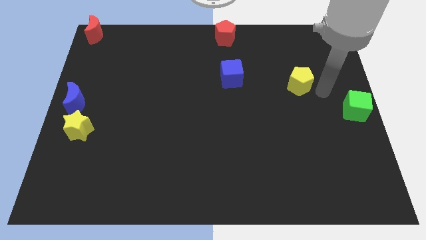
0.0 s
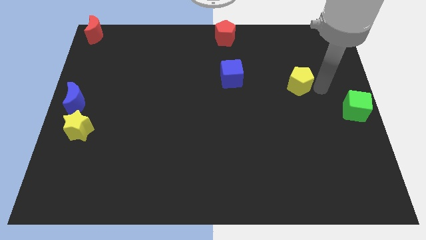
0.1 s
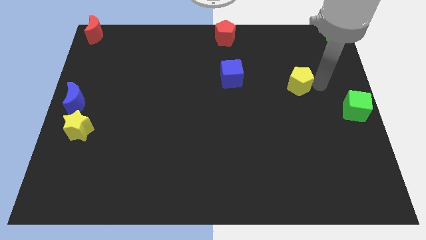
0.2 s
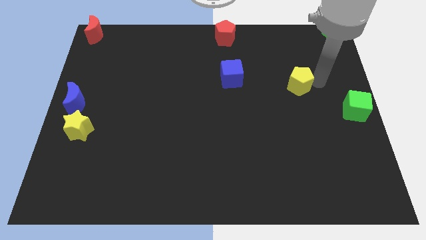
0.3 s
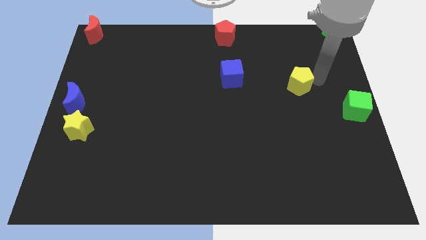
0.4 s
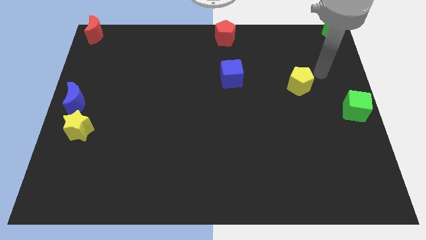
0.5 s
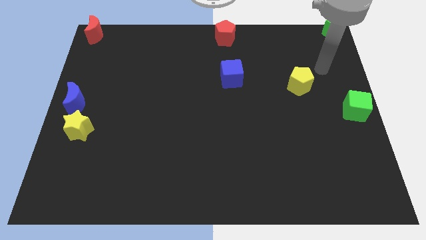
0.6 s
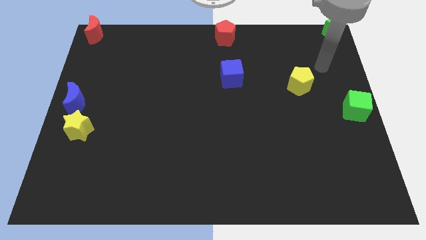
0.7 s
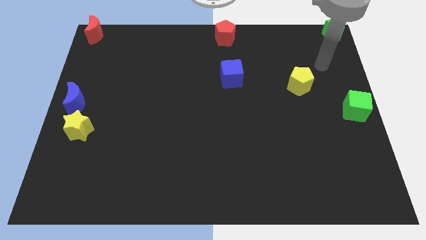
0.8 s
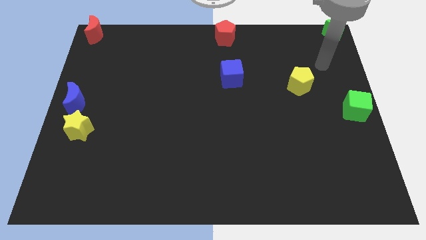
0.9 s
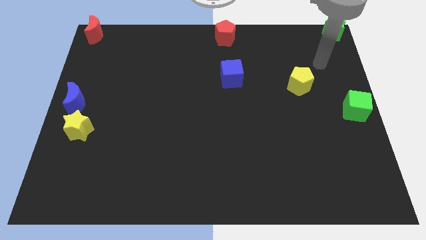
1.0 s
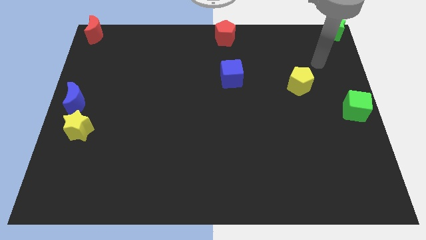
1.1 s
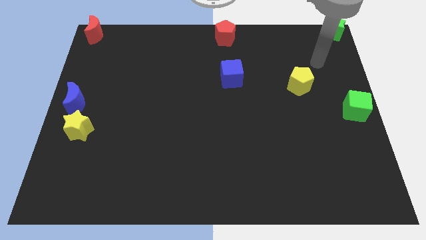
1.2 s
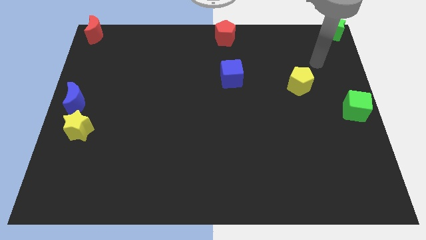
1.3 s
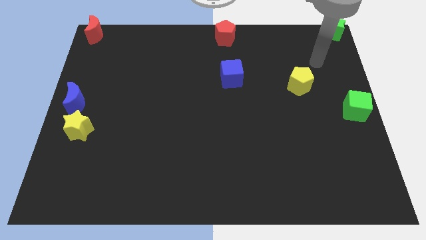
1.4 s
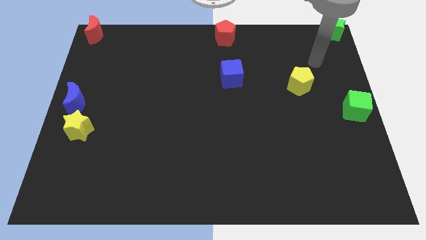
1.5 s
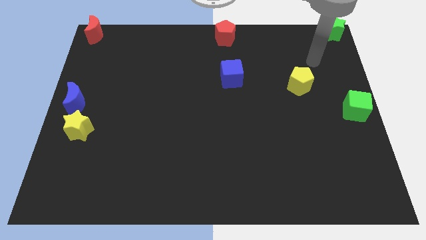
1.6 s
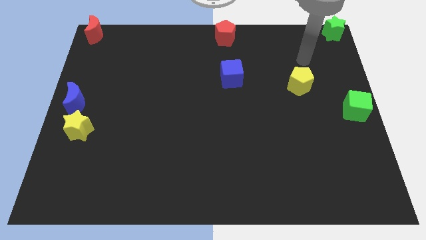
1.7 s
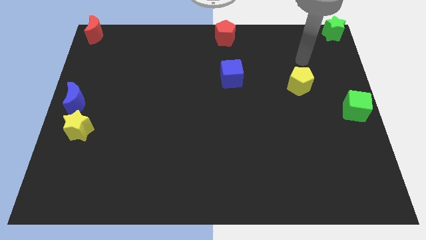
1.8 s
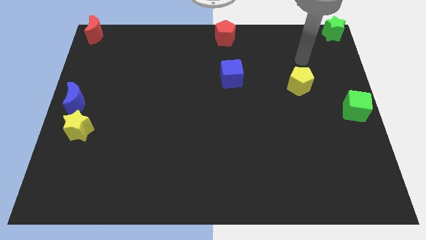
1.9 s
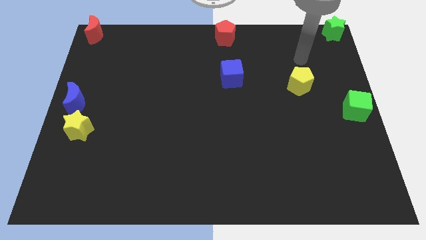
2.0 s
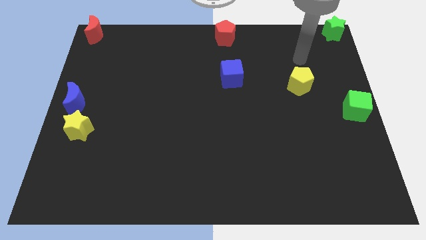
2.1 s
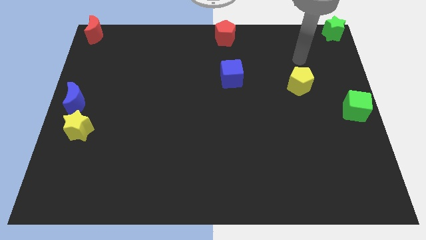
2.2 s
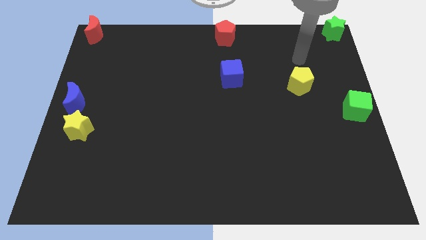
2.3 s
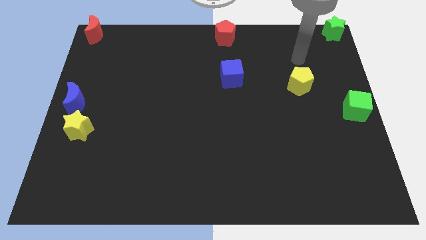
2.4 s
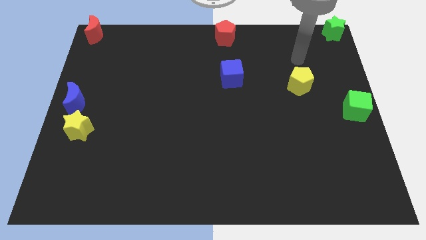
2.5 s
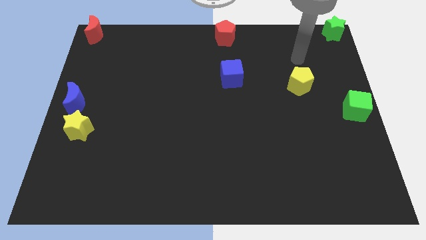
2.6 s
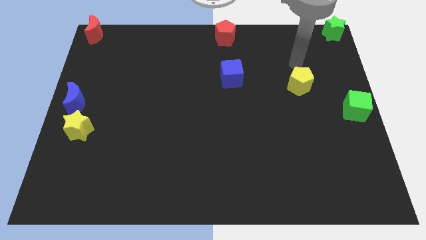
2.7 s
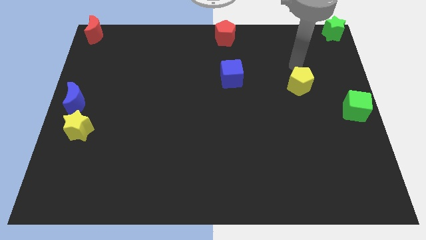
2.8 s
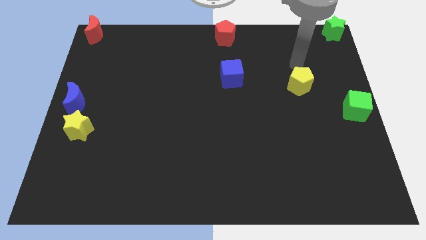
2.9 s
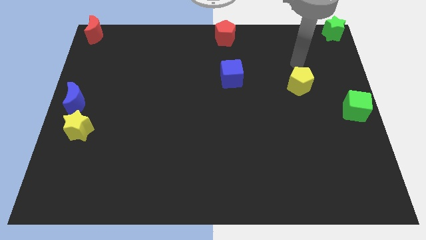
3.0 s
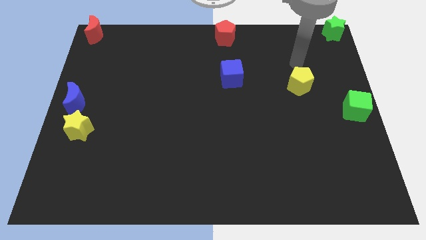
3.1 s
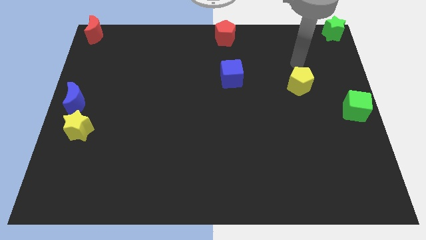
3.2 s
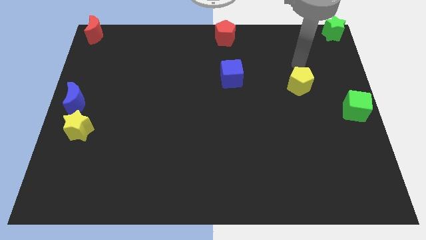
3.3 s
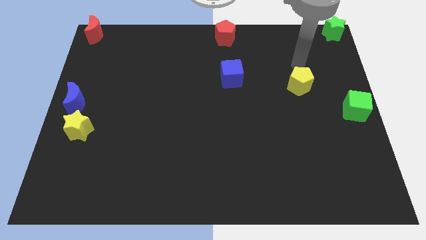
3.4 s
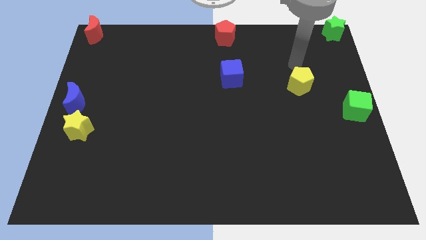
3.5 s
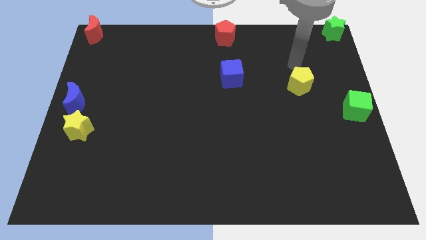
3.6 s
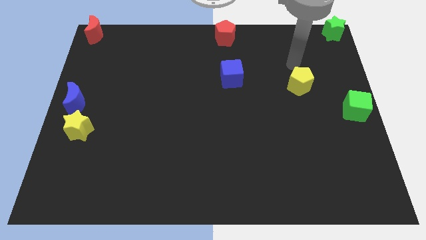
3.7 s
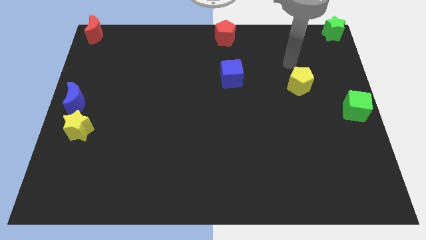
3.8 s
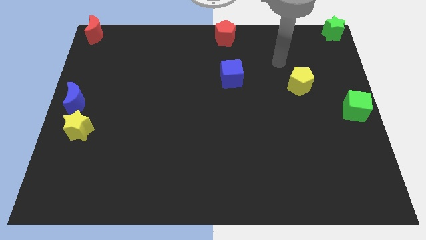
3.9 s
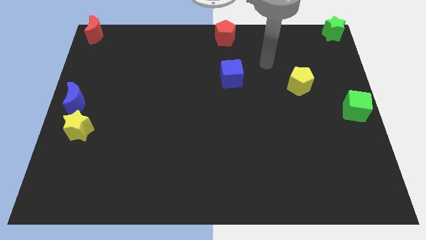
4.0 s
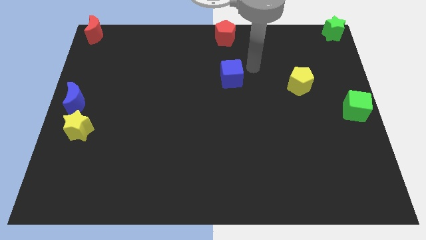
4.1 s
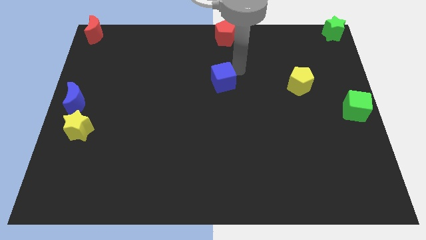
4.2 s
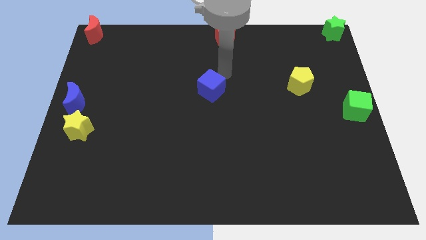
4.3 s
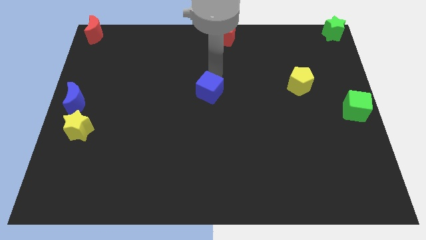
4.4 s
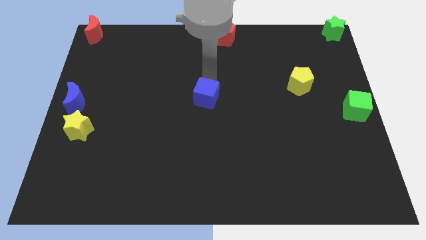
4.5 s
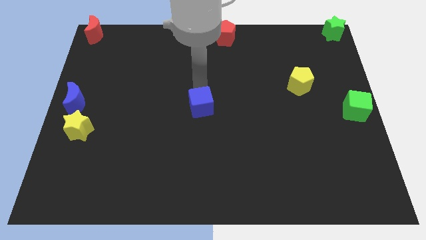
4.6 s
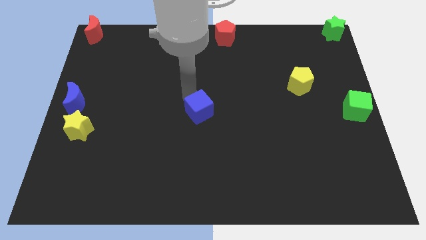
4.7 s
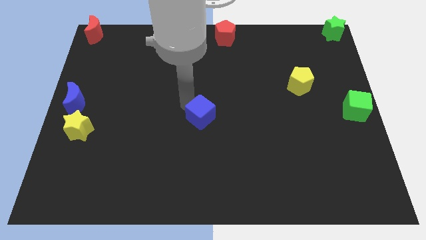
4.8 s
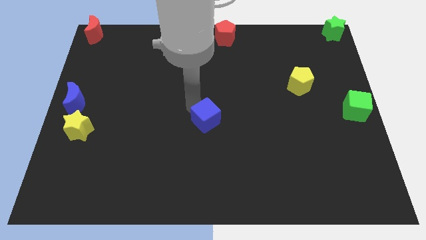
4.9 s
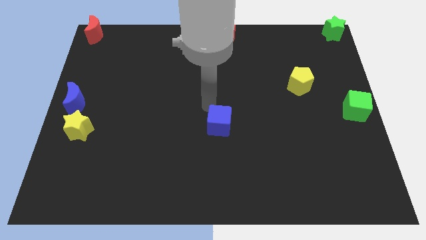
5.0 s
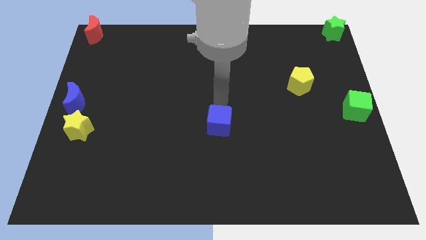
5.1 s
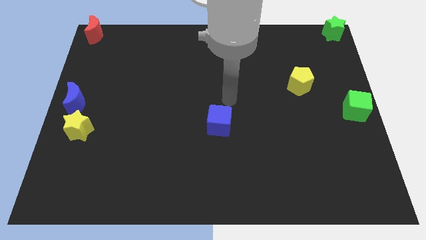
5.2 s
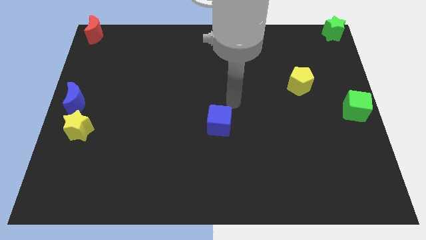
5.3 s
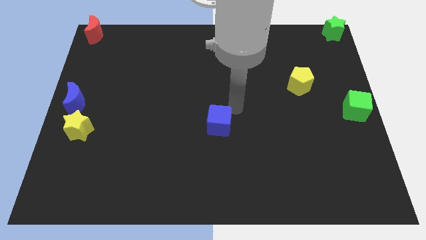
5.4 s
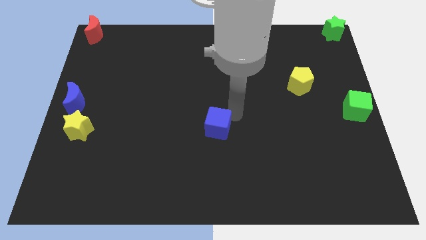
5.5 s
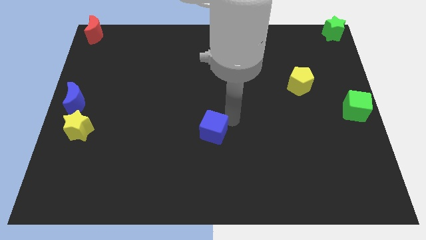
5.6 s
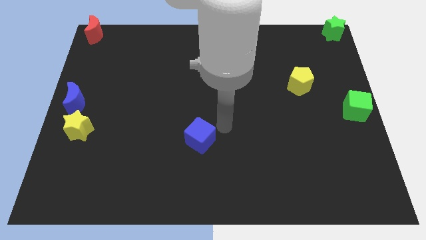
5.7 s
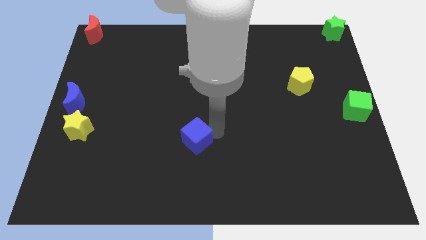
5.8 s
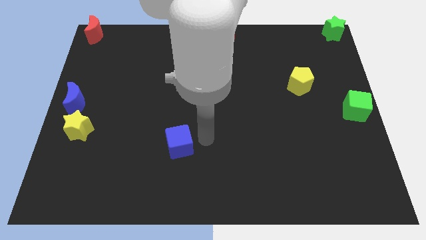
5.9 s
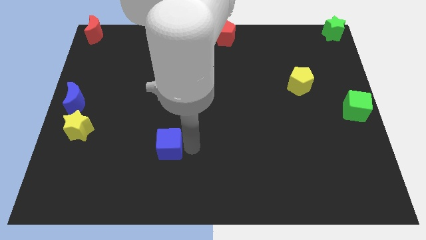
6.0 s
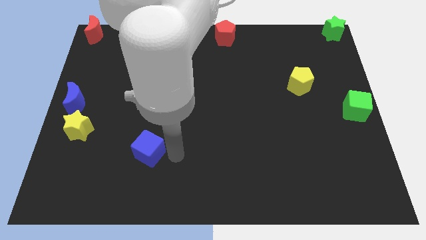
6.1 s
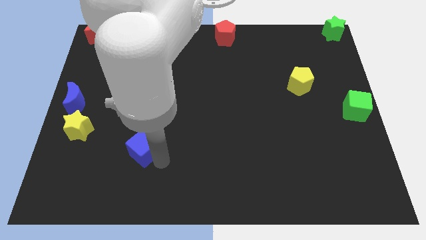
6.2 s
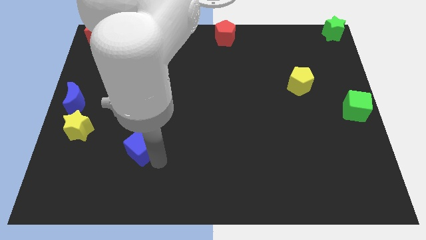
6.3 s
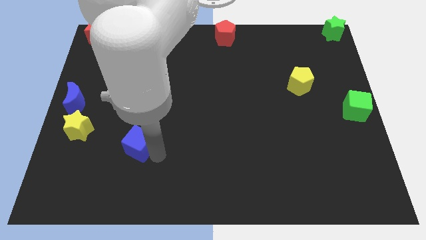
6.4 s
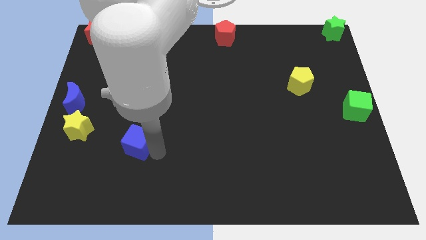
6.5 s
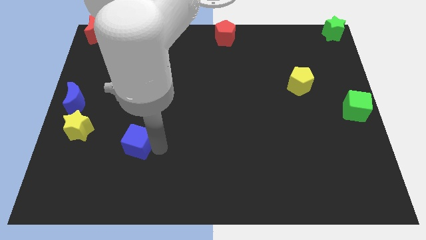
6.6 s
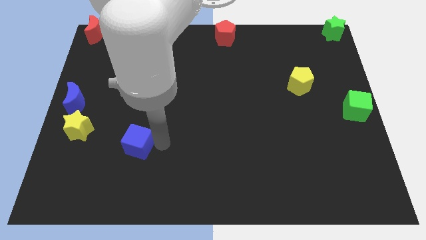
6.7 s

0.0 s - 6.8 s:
move the blue cube towards the bottom left

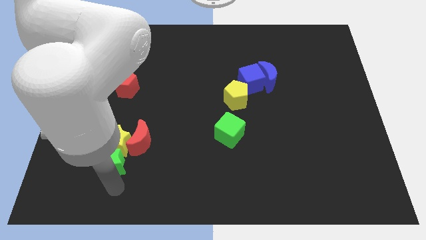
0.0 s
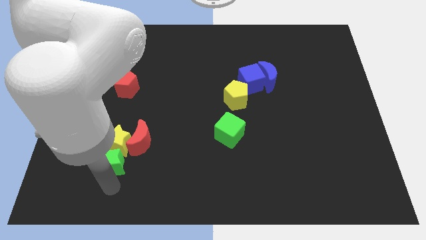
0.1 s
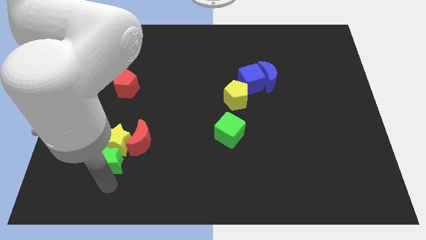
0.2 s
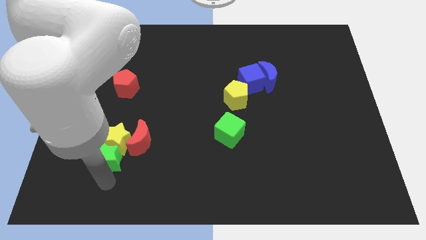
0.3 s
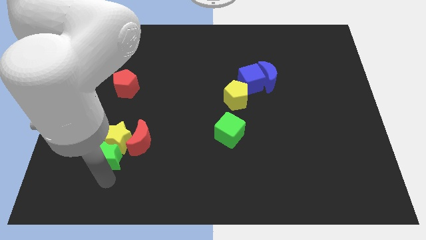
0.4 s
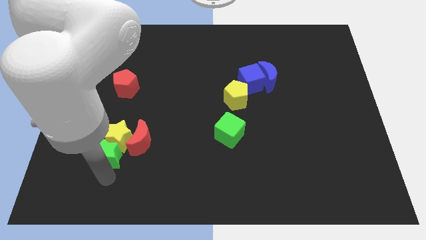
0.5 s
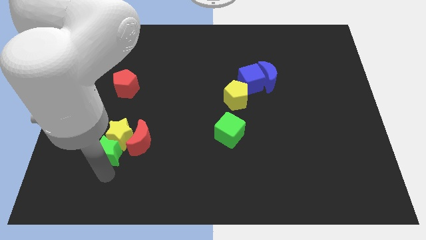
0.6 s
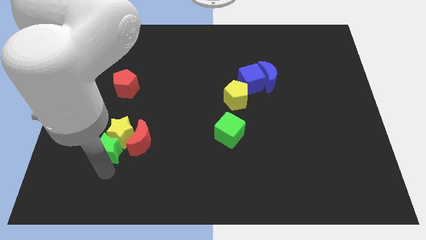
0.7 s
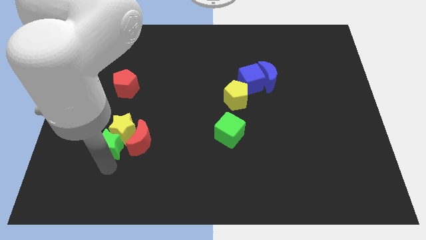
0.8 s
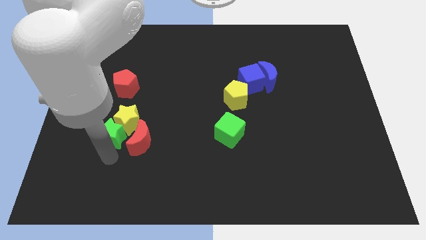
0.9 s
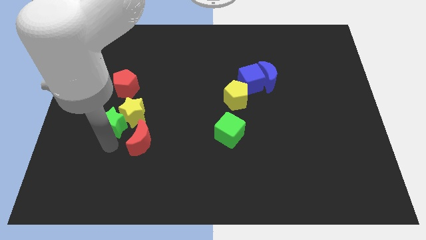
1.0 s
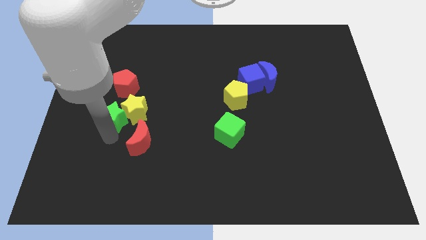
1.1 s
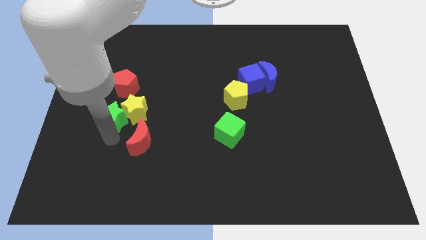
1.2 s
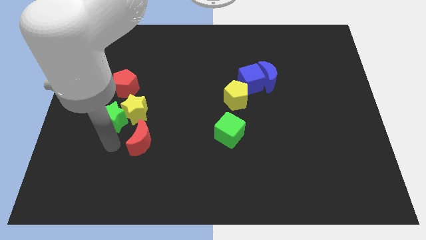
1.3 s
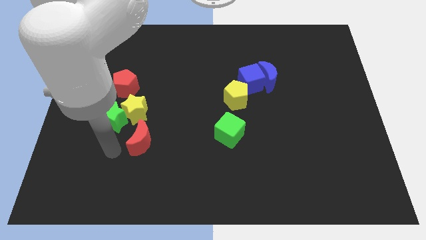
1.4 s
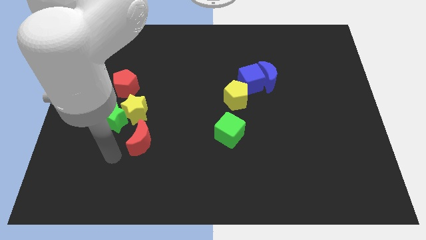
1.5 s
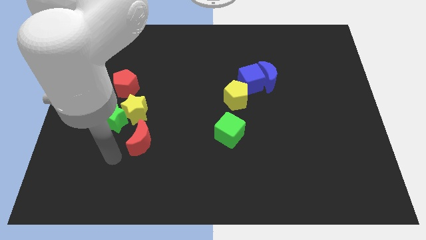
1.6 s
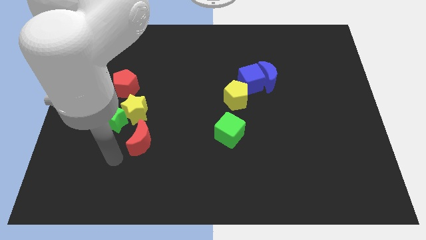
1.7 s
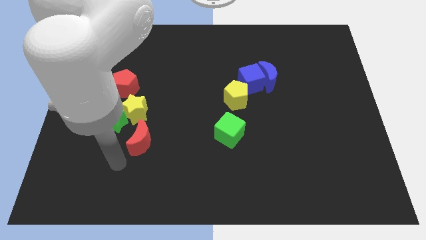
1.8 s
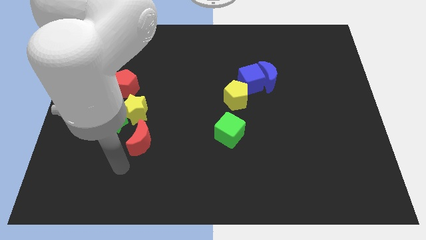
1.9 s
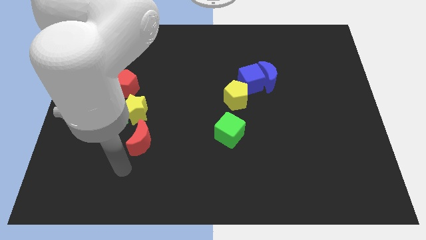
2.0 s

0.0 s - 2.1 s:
place the green and yellow star between the red blocks

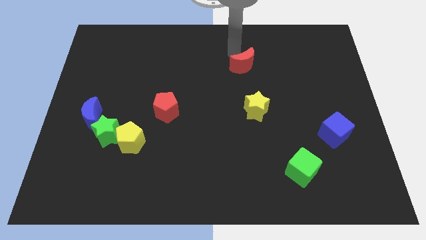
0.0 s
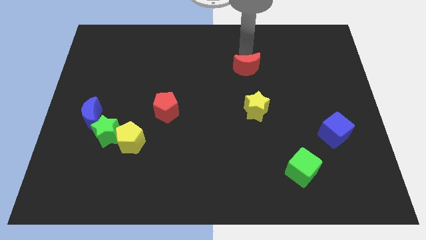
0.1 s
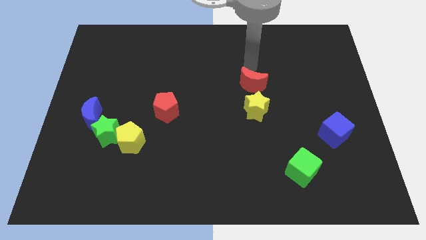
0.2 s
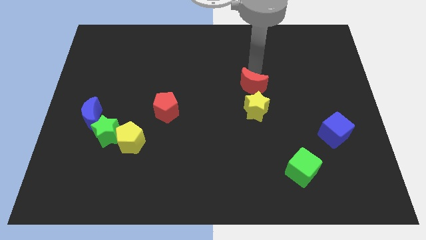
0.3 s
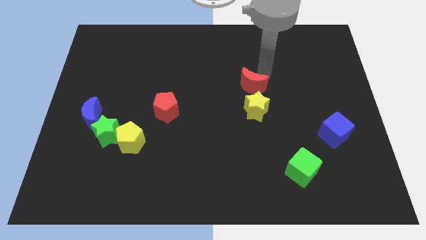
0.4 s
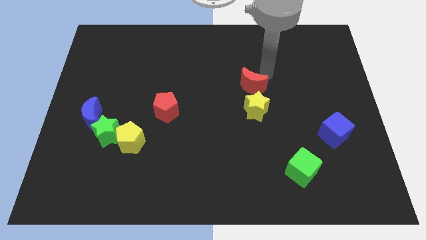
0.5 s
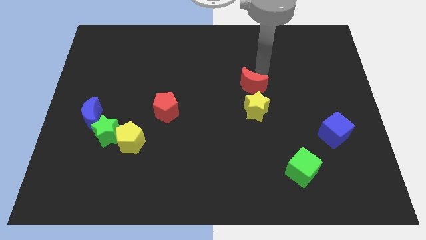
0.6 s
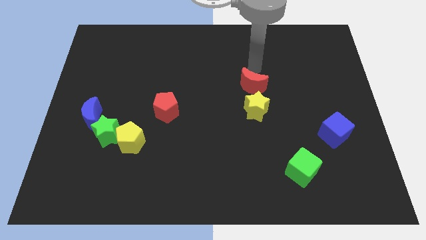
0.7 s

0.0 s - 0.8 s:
place the red crescent above the yellow star
